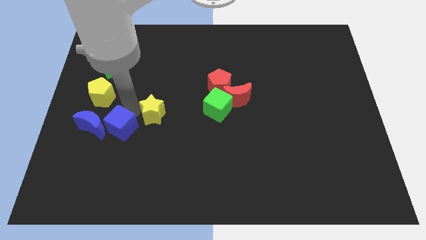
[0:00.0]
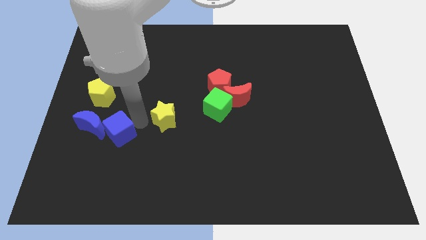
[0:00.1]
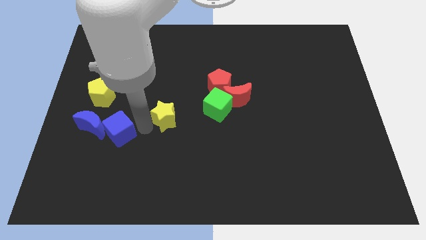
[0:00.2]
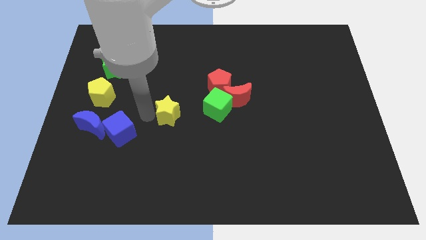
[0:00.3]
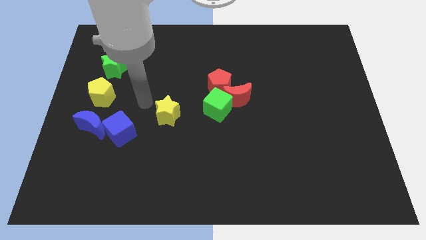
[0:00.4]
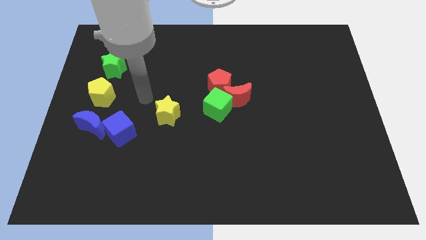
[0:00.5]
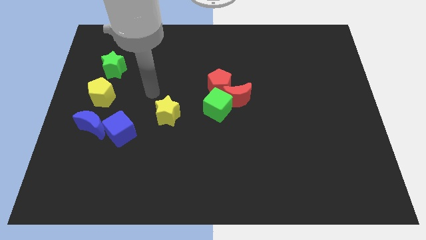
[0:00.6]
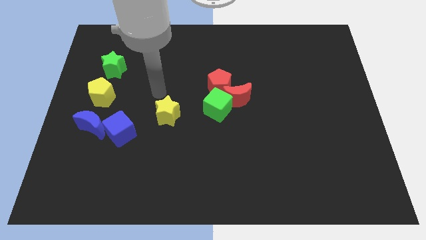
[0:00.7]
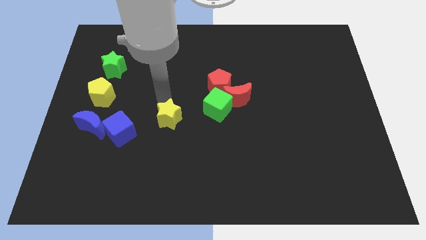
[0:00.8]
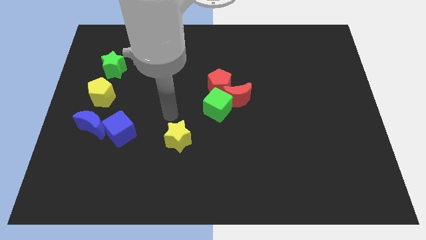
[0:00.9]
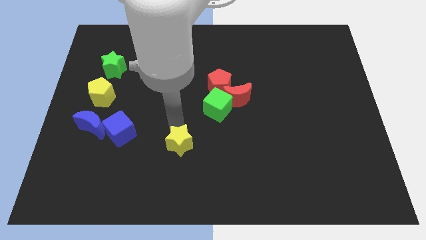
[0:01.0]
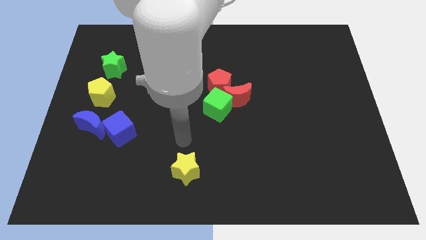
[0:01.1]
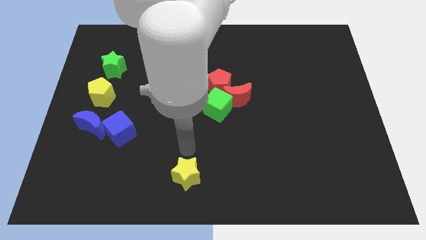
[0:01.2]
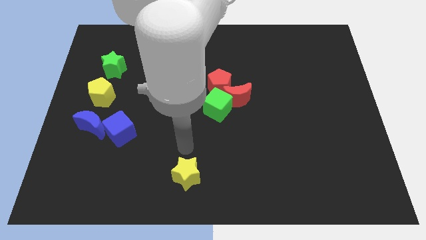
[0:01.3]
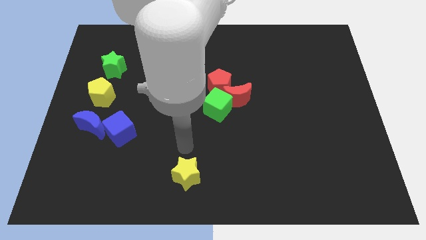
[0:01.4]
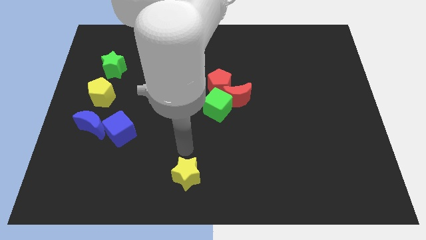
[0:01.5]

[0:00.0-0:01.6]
move the yellow star to the bottom middle

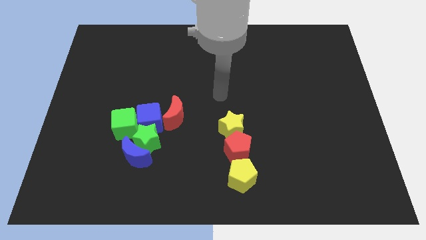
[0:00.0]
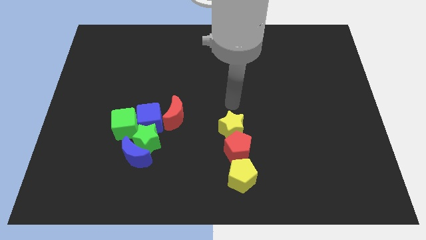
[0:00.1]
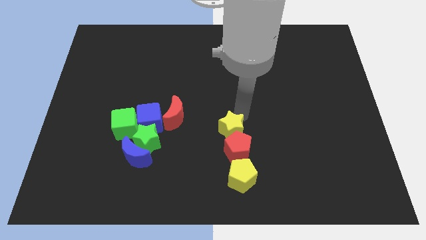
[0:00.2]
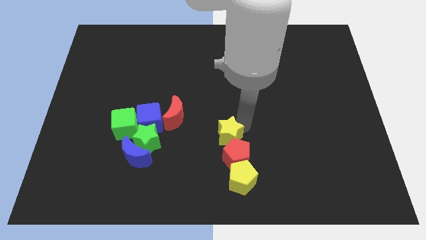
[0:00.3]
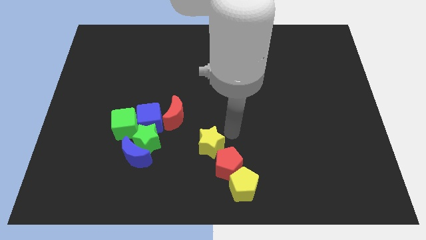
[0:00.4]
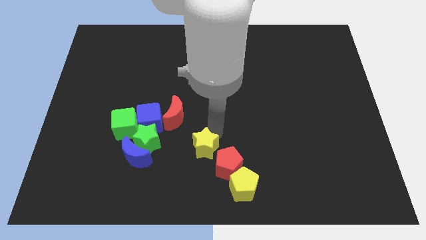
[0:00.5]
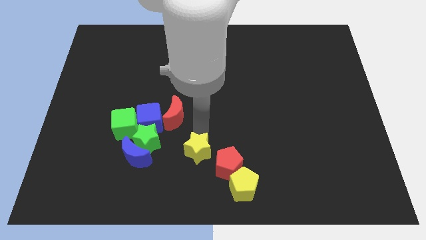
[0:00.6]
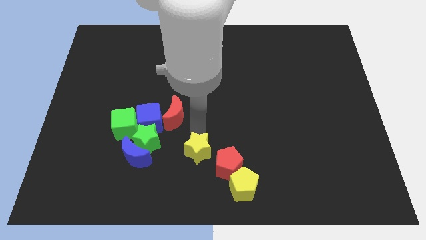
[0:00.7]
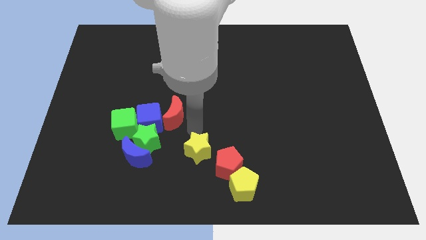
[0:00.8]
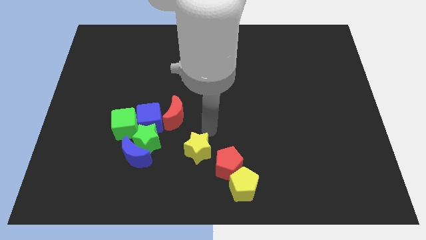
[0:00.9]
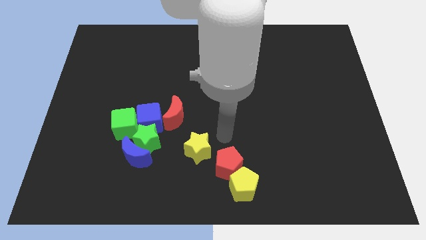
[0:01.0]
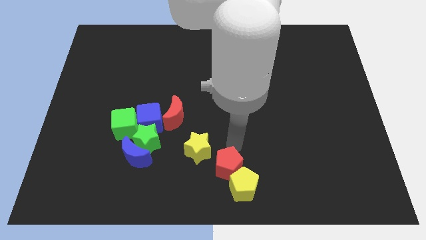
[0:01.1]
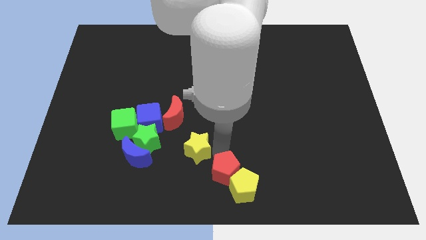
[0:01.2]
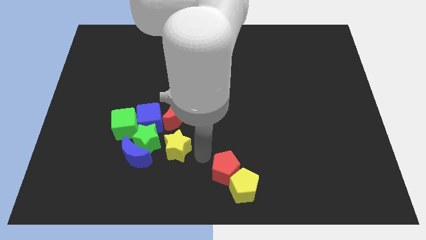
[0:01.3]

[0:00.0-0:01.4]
push the yellow star slightly below the red moon

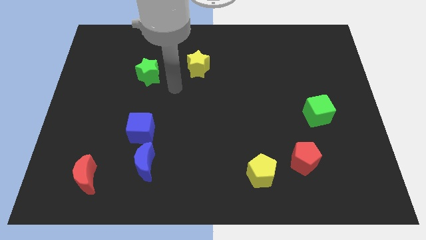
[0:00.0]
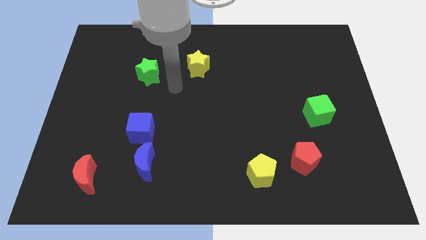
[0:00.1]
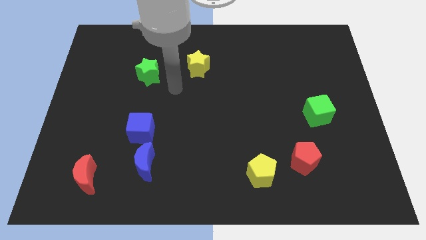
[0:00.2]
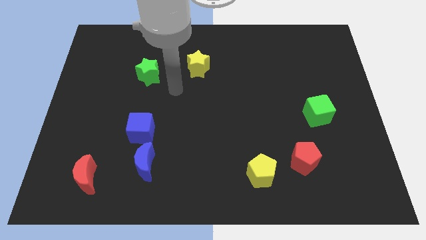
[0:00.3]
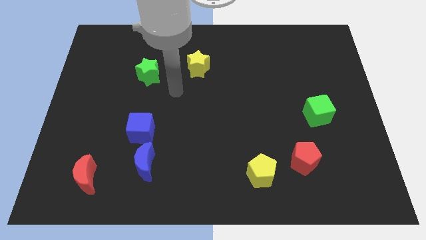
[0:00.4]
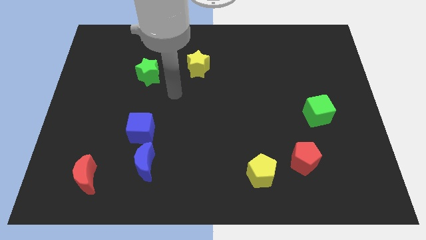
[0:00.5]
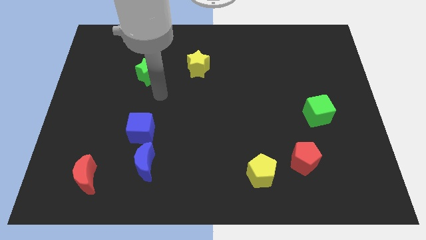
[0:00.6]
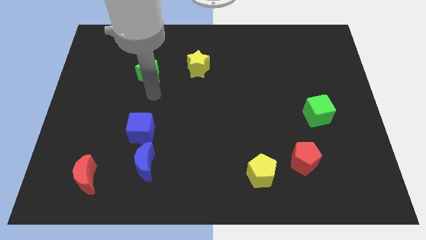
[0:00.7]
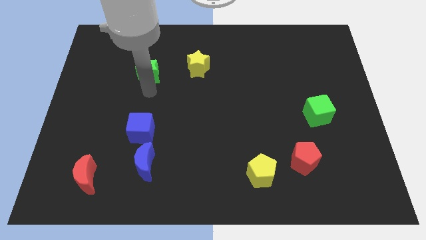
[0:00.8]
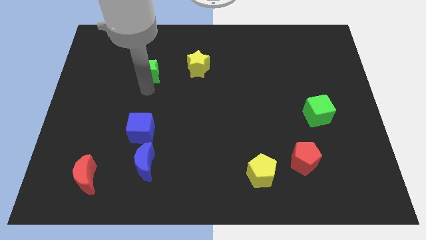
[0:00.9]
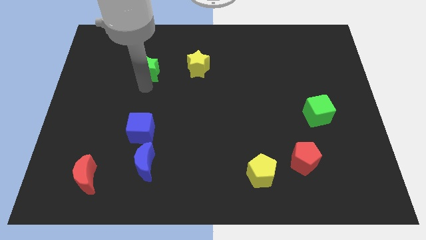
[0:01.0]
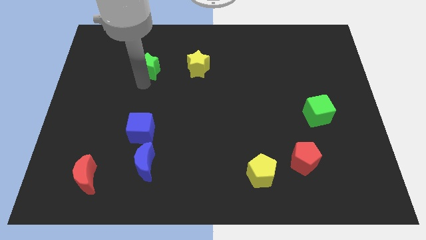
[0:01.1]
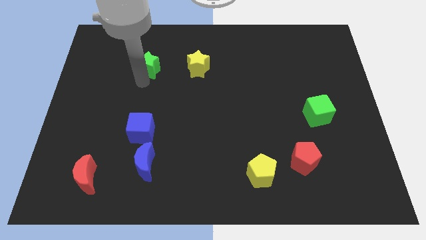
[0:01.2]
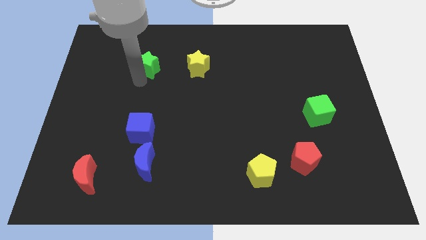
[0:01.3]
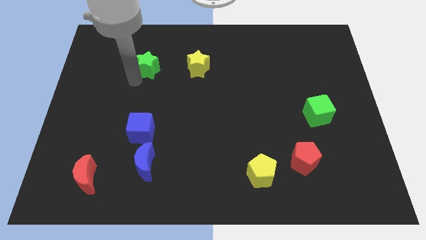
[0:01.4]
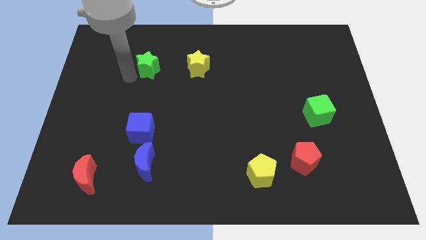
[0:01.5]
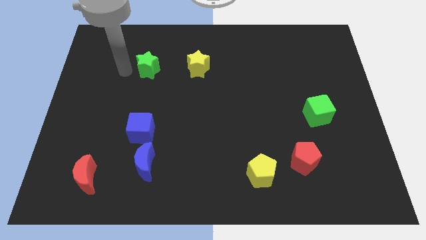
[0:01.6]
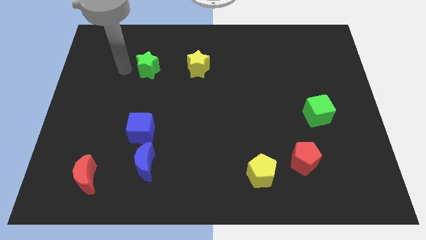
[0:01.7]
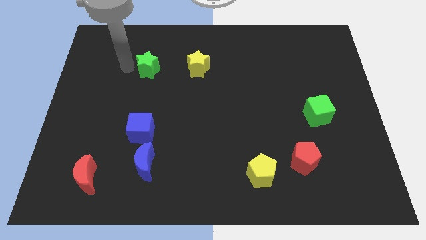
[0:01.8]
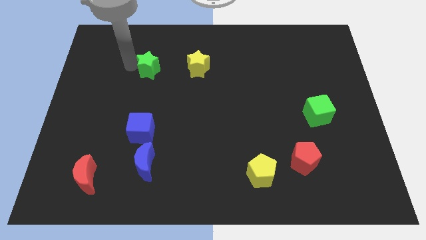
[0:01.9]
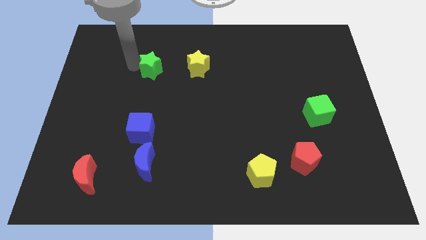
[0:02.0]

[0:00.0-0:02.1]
slide green star up slightly to the left of yellow star

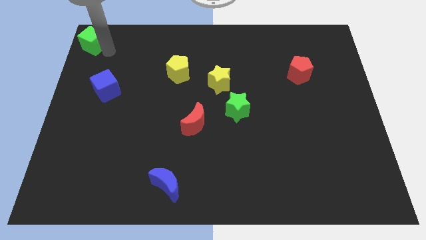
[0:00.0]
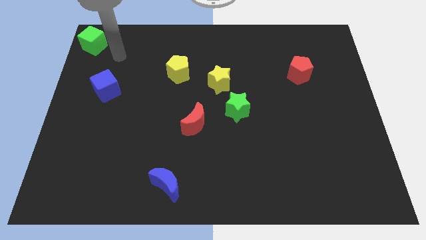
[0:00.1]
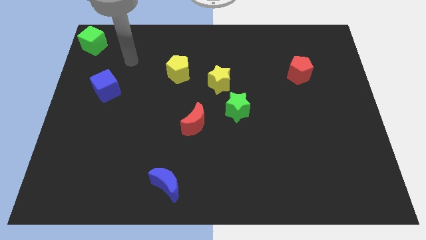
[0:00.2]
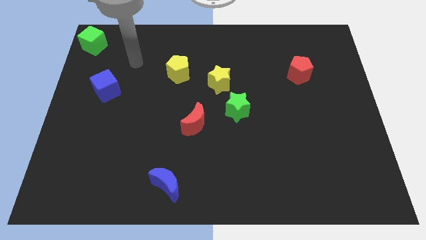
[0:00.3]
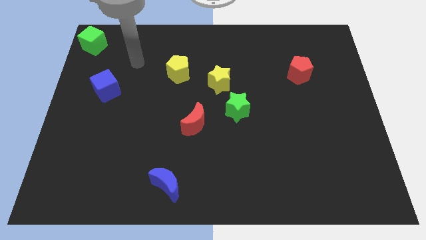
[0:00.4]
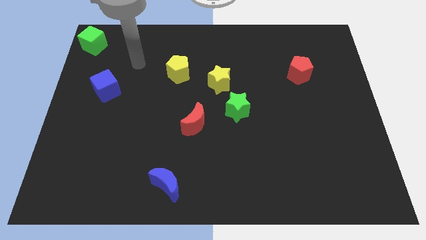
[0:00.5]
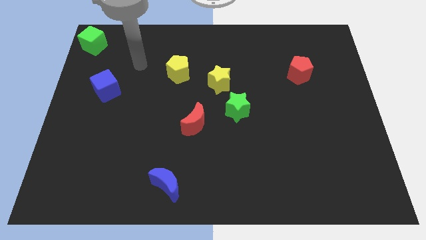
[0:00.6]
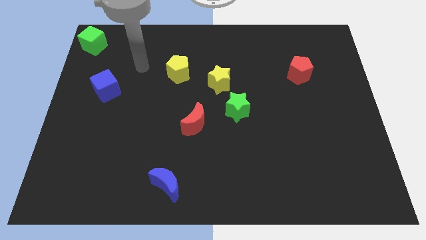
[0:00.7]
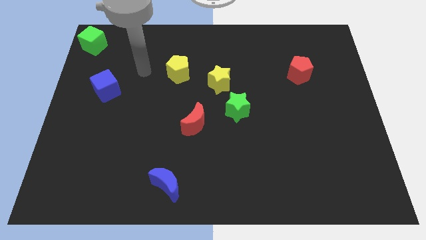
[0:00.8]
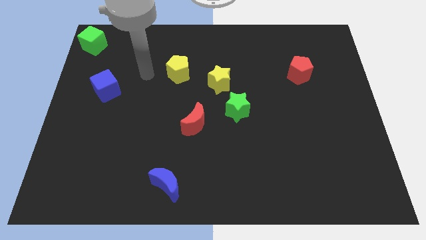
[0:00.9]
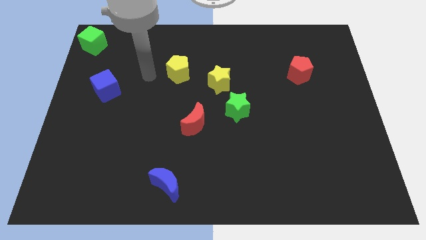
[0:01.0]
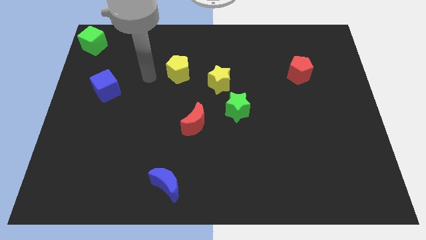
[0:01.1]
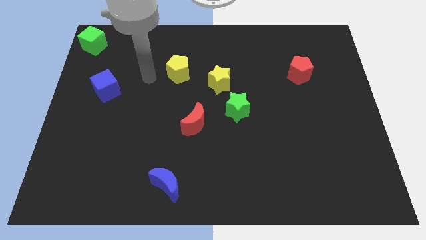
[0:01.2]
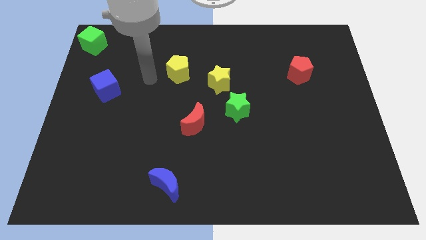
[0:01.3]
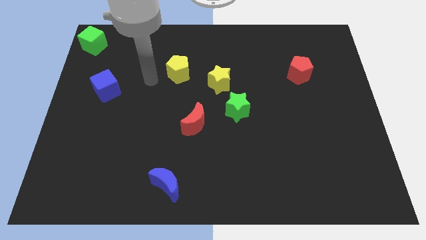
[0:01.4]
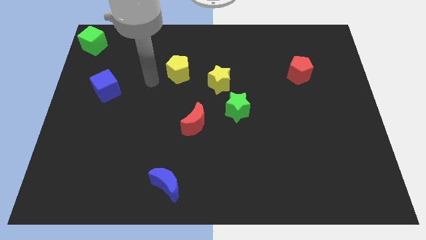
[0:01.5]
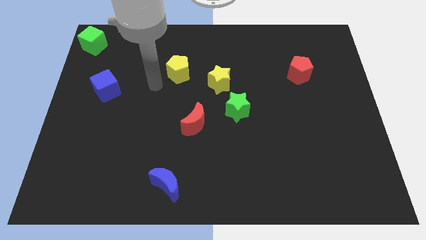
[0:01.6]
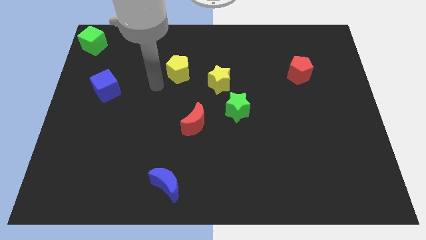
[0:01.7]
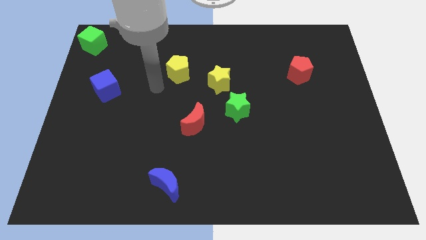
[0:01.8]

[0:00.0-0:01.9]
move the arm away from the green cube

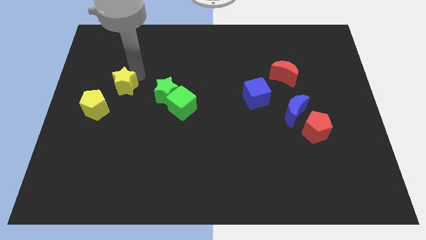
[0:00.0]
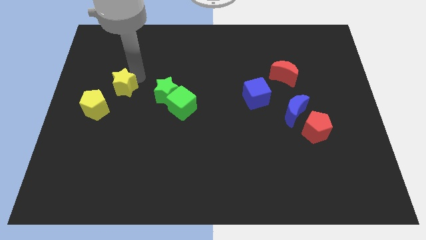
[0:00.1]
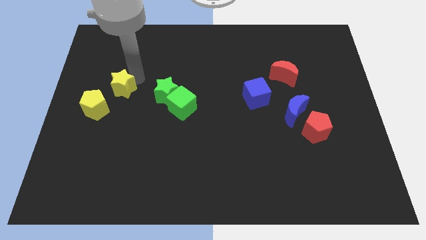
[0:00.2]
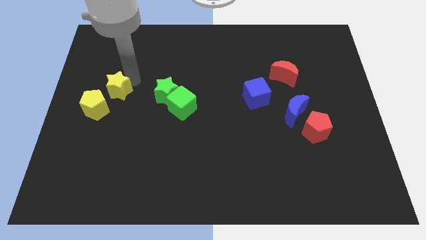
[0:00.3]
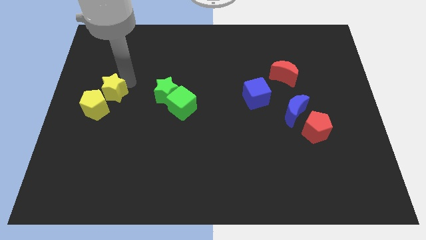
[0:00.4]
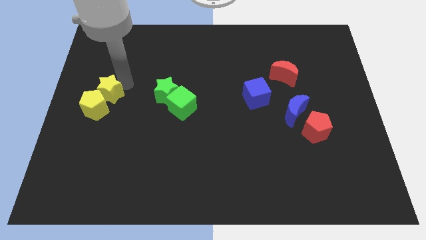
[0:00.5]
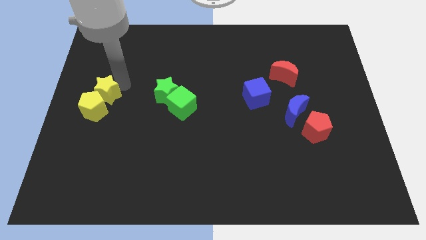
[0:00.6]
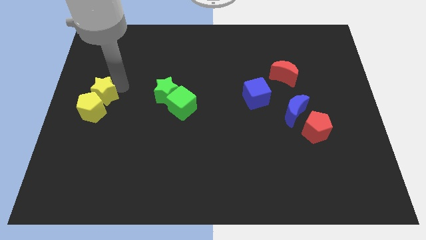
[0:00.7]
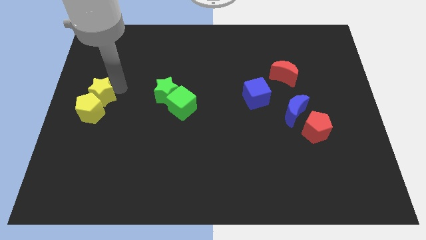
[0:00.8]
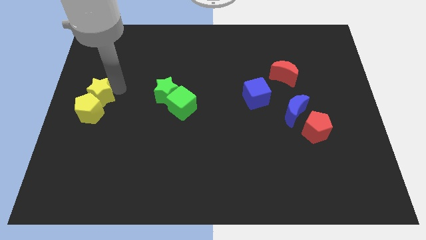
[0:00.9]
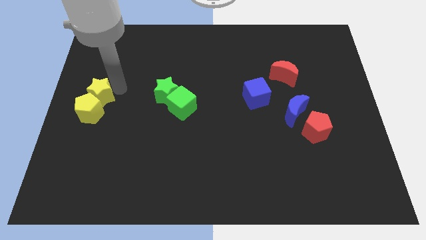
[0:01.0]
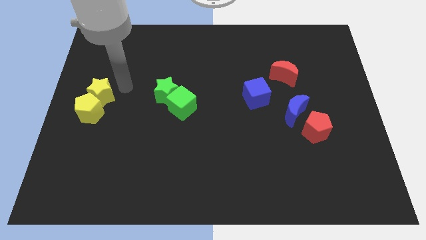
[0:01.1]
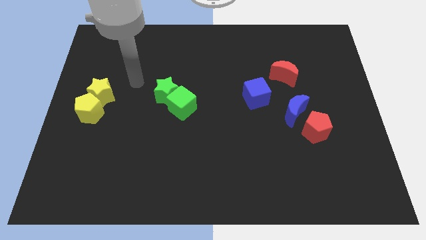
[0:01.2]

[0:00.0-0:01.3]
push yellow star in to yellow pentagon

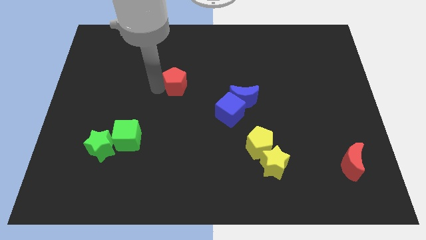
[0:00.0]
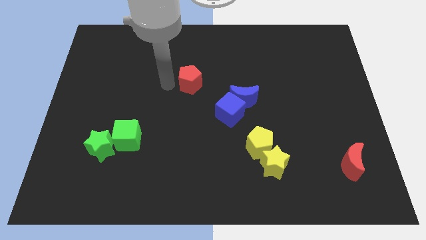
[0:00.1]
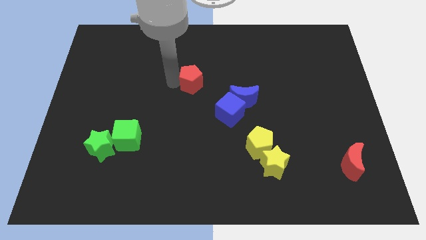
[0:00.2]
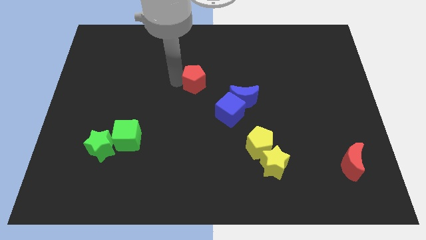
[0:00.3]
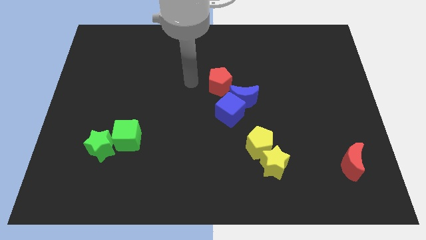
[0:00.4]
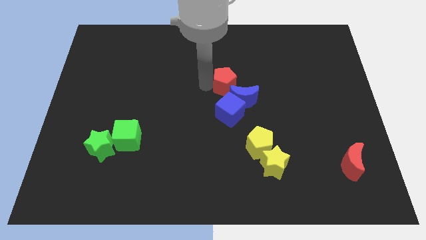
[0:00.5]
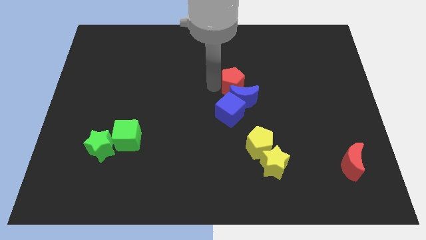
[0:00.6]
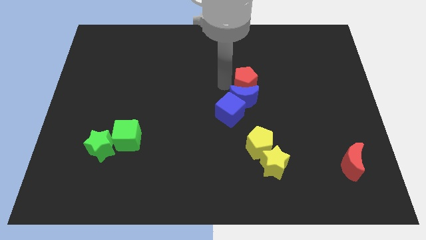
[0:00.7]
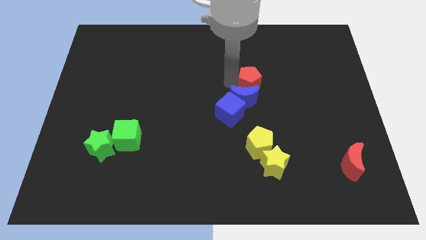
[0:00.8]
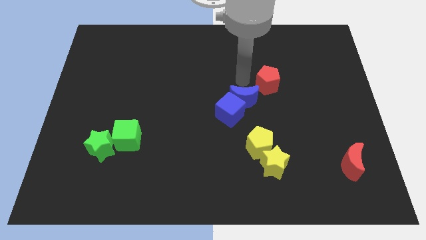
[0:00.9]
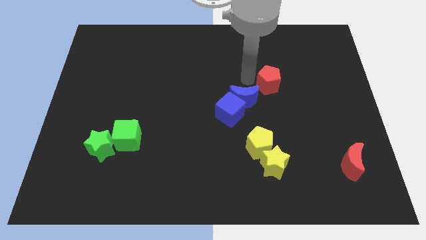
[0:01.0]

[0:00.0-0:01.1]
move the red pentagon towards the slightly center right of the board
